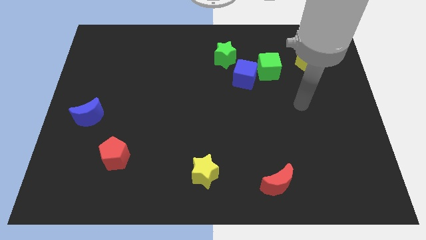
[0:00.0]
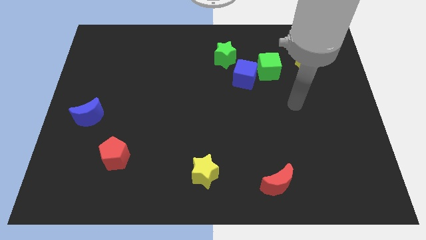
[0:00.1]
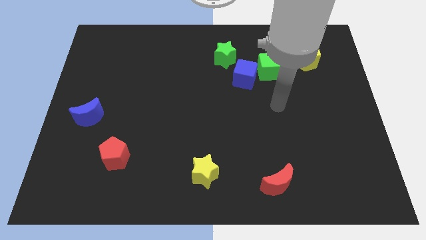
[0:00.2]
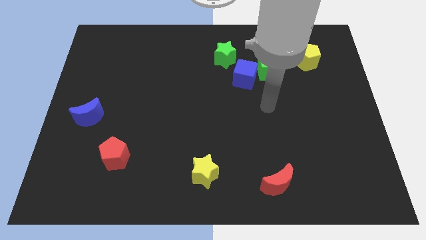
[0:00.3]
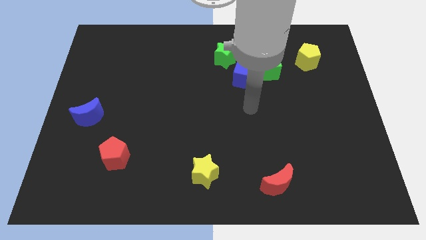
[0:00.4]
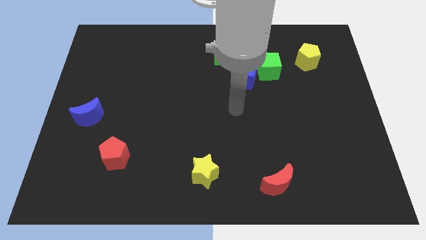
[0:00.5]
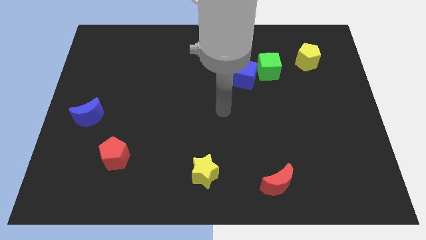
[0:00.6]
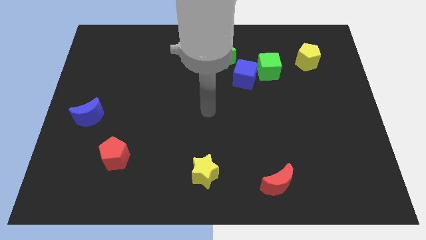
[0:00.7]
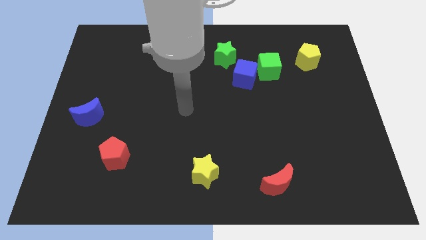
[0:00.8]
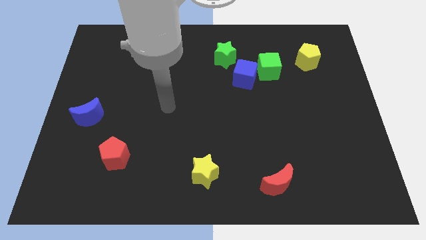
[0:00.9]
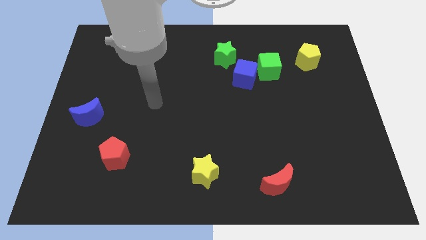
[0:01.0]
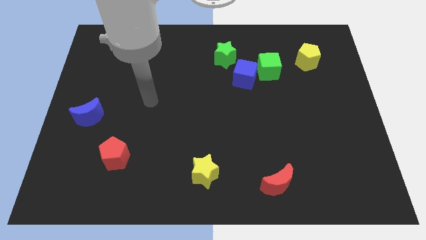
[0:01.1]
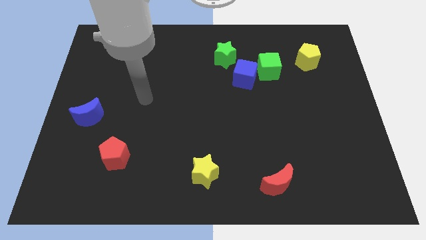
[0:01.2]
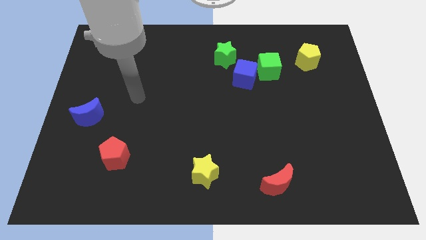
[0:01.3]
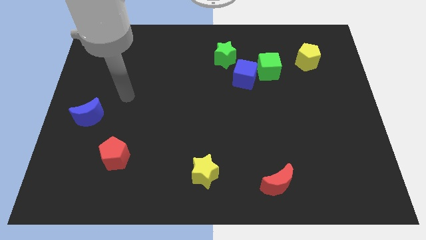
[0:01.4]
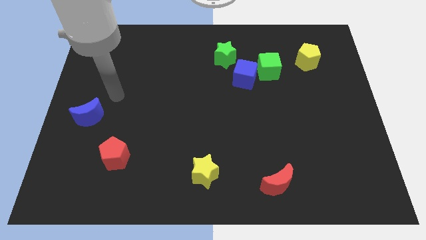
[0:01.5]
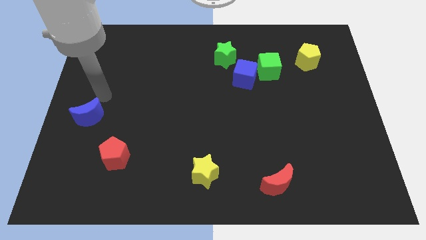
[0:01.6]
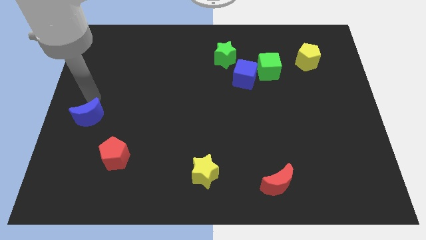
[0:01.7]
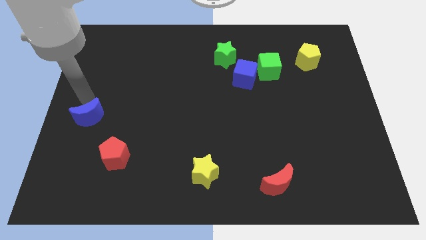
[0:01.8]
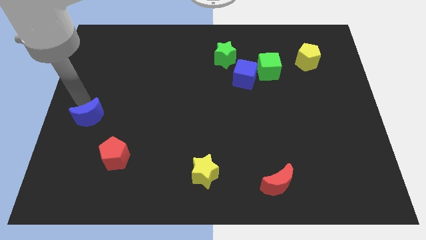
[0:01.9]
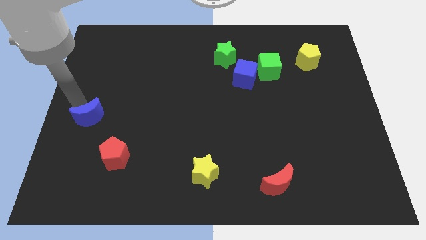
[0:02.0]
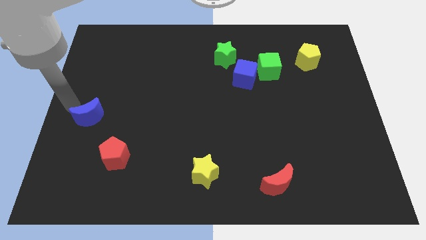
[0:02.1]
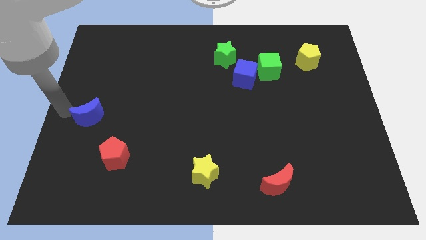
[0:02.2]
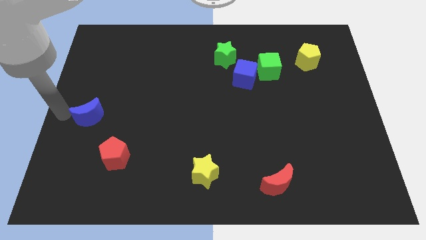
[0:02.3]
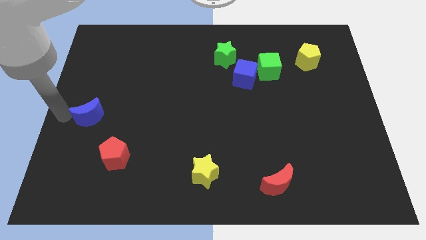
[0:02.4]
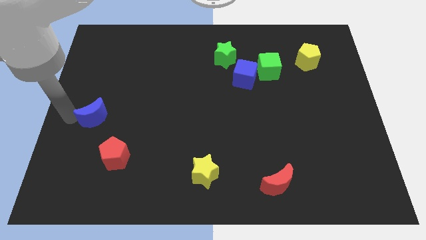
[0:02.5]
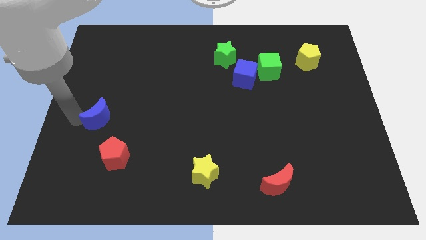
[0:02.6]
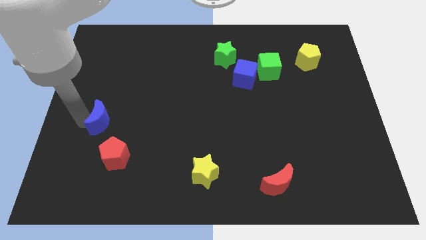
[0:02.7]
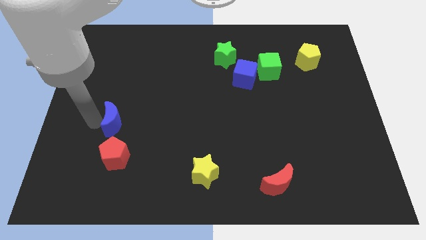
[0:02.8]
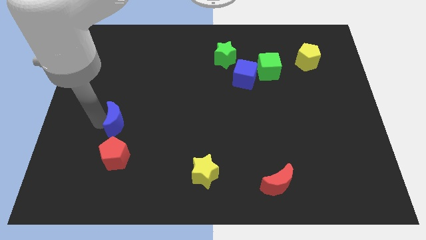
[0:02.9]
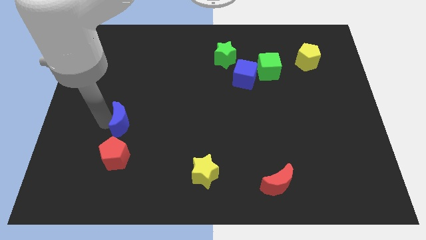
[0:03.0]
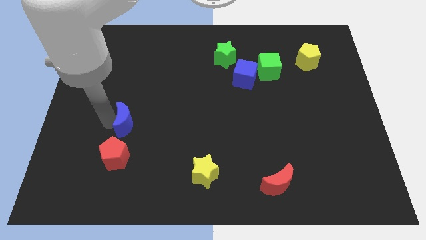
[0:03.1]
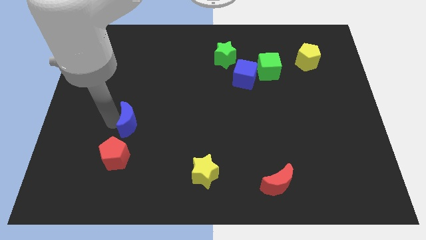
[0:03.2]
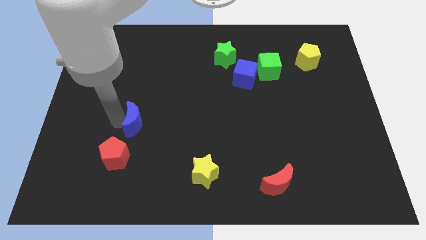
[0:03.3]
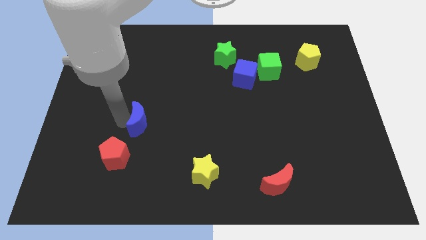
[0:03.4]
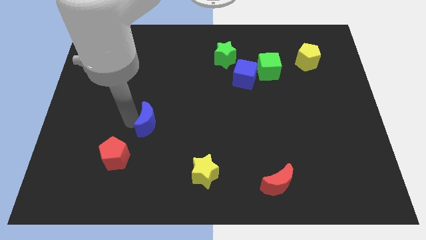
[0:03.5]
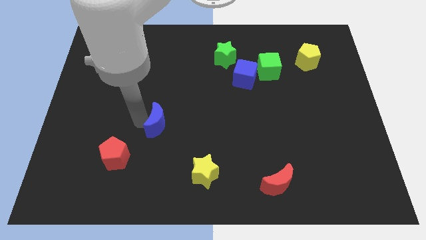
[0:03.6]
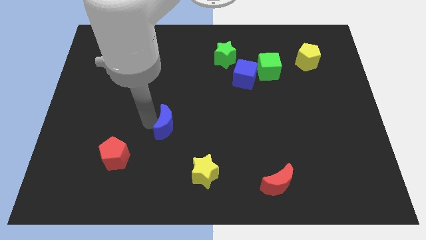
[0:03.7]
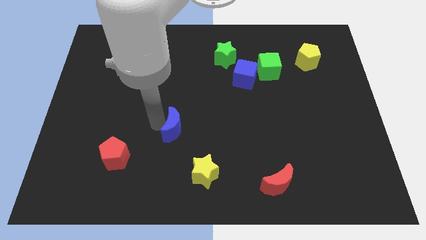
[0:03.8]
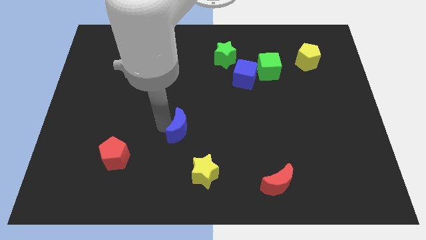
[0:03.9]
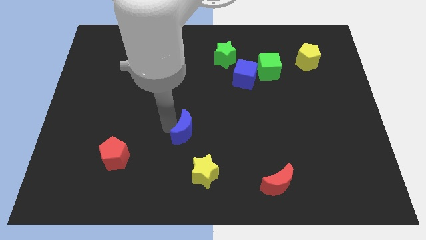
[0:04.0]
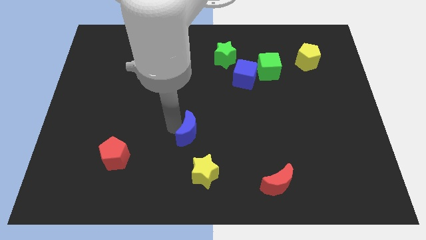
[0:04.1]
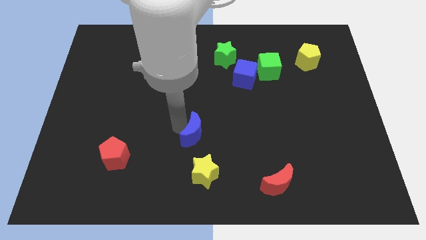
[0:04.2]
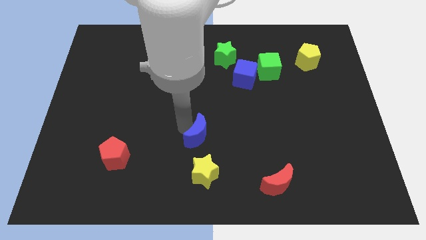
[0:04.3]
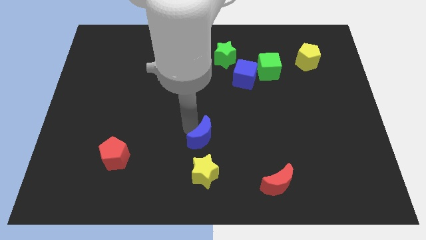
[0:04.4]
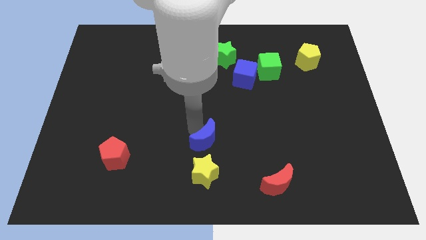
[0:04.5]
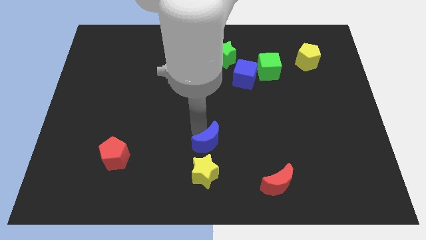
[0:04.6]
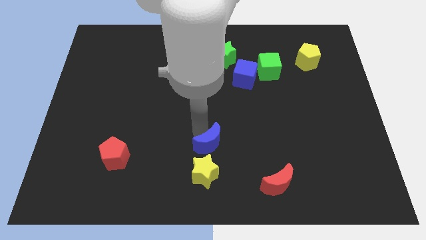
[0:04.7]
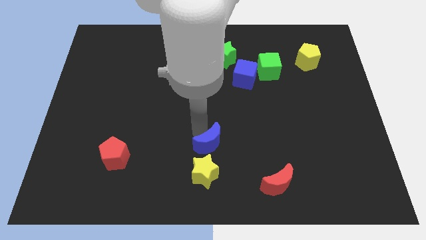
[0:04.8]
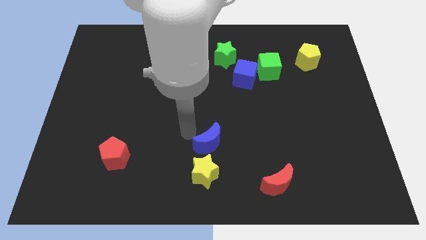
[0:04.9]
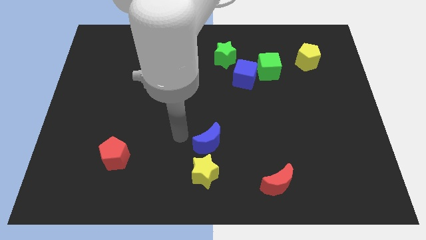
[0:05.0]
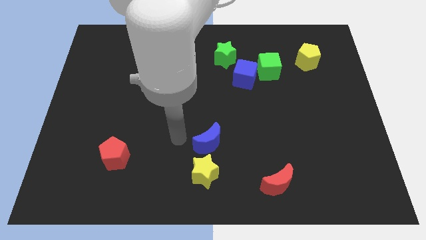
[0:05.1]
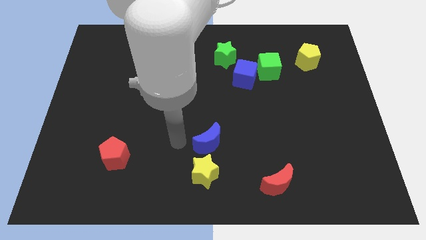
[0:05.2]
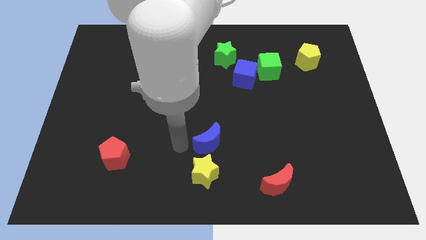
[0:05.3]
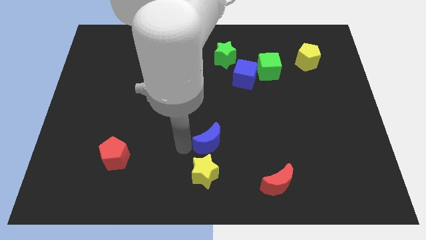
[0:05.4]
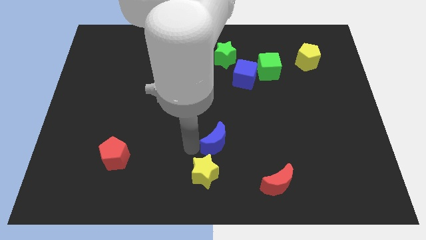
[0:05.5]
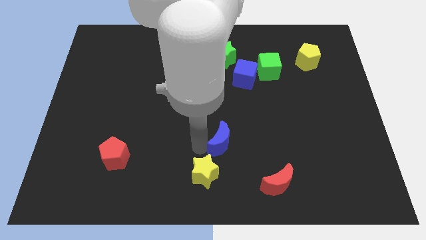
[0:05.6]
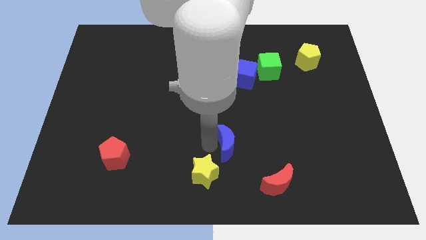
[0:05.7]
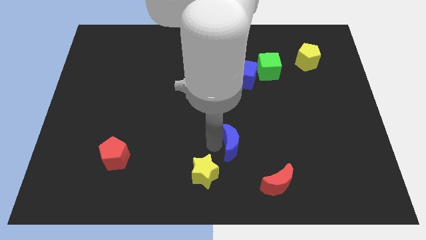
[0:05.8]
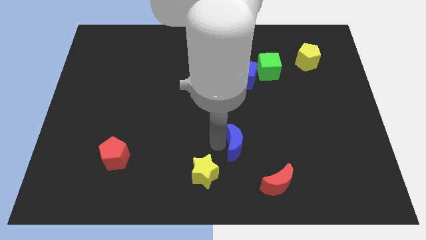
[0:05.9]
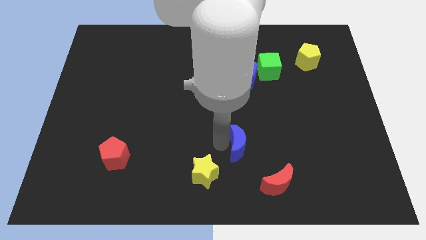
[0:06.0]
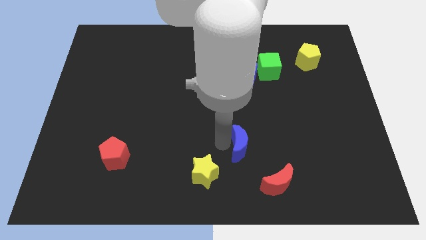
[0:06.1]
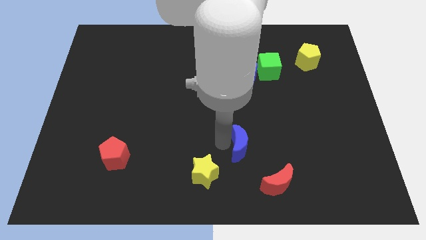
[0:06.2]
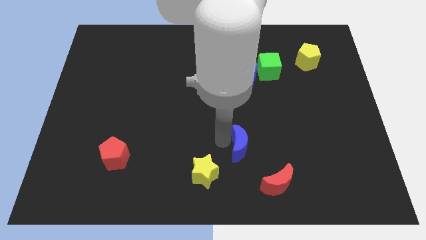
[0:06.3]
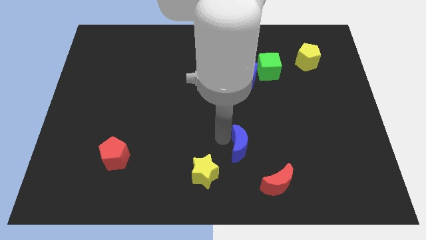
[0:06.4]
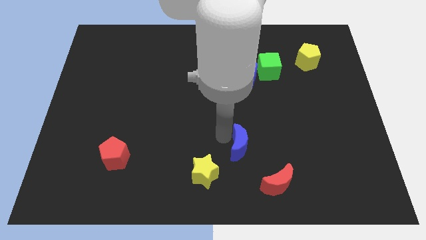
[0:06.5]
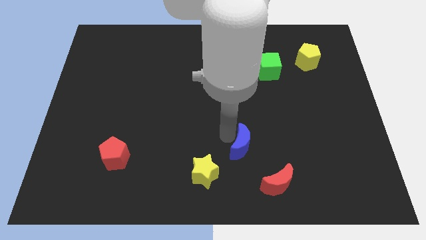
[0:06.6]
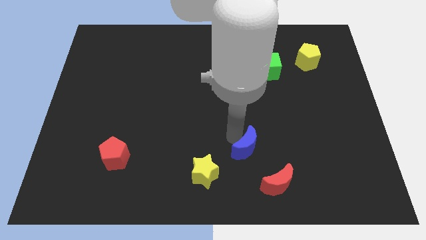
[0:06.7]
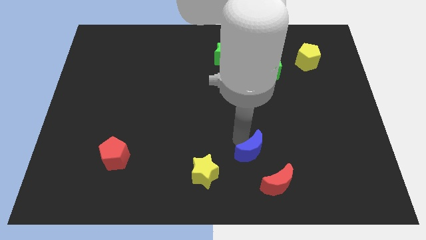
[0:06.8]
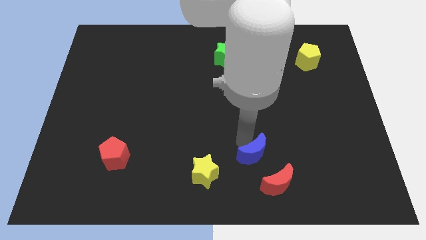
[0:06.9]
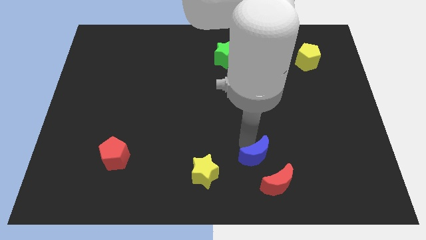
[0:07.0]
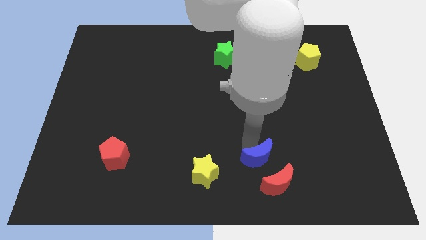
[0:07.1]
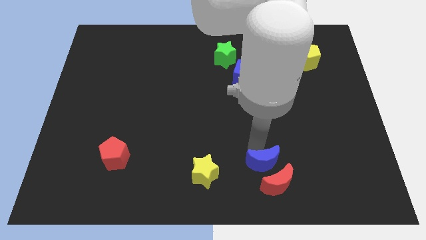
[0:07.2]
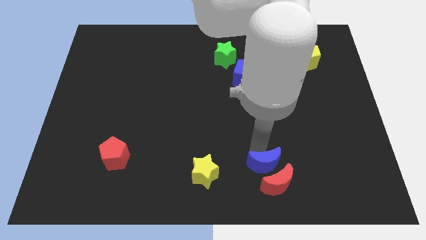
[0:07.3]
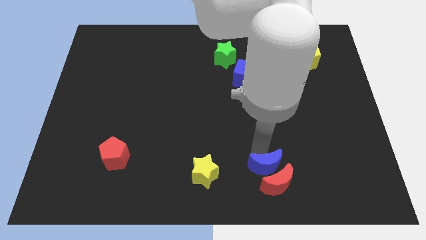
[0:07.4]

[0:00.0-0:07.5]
slide the blue moon to the red moon

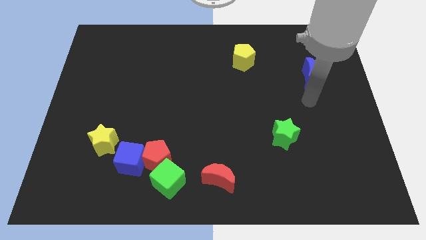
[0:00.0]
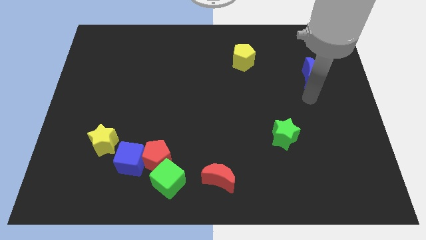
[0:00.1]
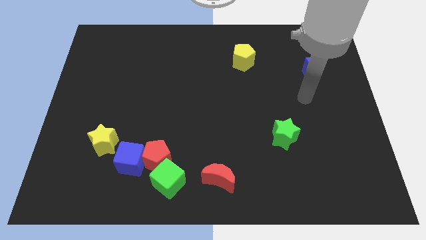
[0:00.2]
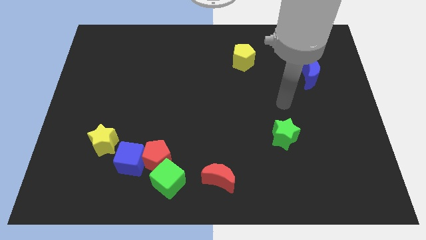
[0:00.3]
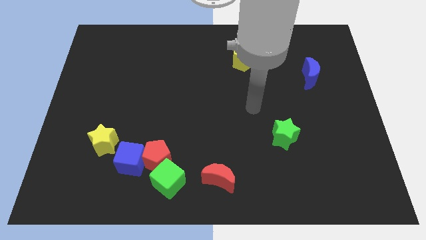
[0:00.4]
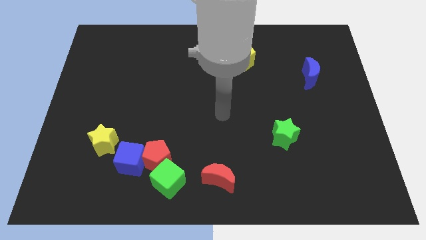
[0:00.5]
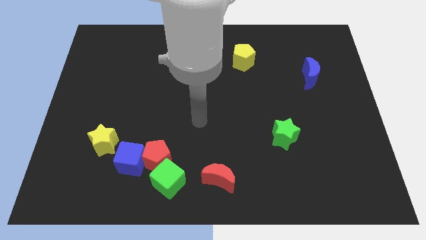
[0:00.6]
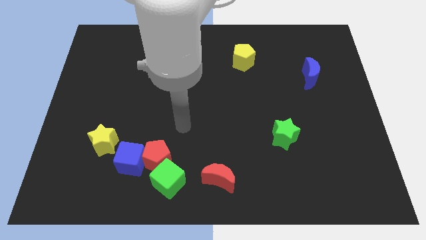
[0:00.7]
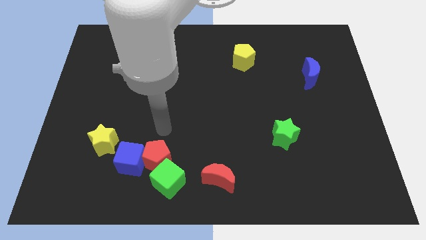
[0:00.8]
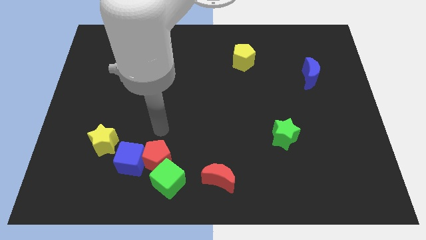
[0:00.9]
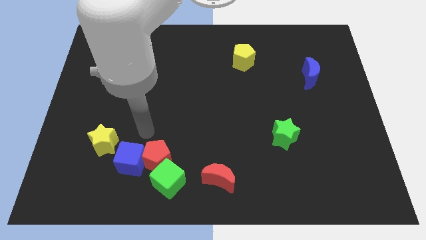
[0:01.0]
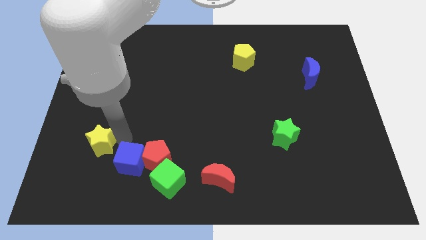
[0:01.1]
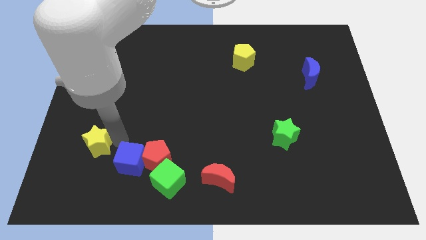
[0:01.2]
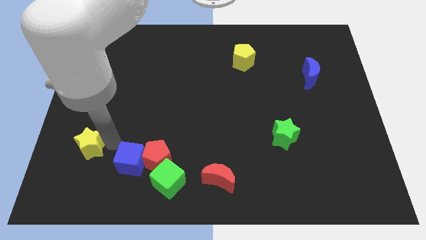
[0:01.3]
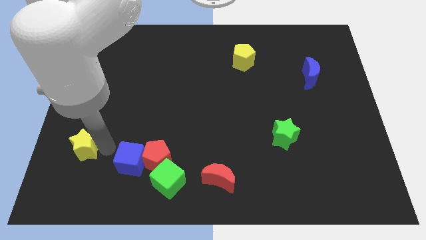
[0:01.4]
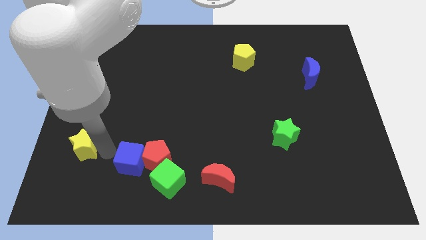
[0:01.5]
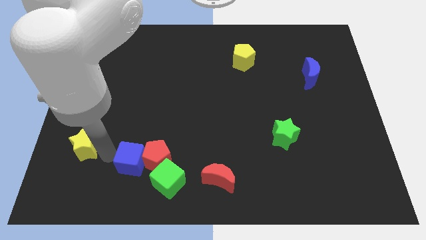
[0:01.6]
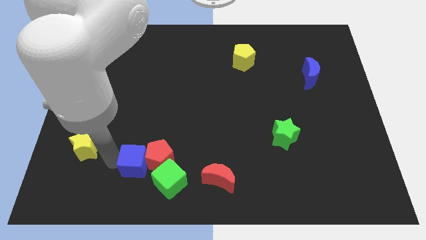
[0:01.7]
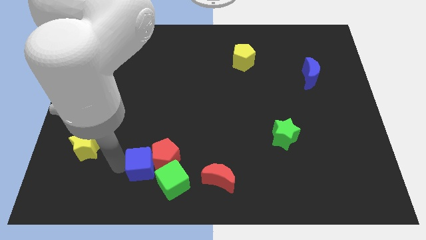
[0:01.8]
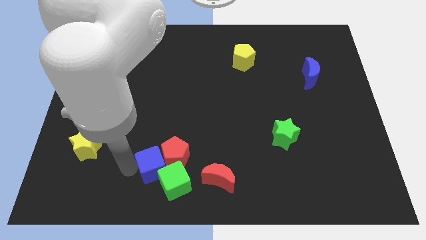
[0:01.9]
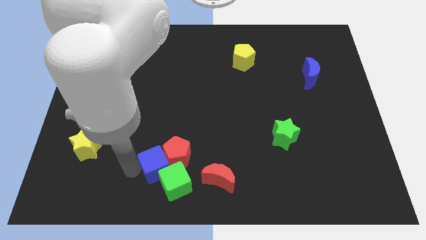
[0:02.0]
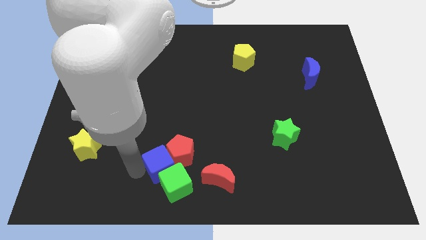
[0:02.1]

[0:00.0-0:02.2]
put the blue cube close to the green cube
